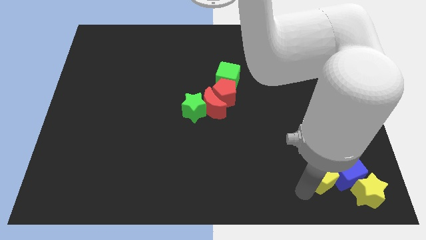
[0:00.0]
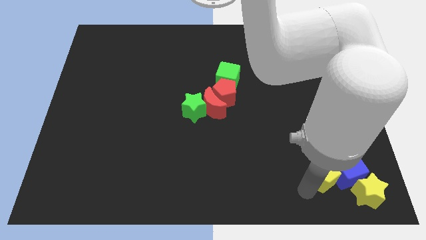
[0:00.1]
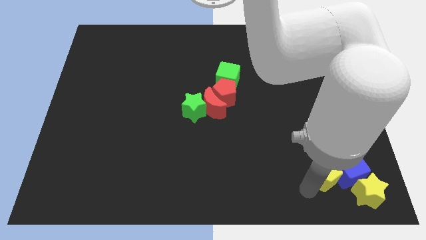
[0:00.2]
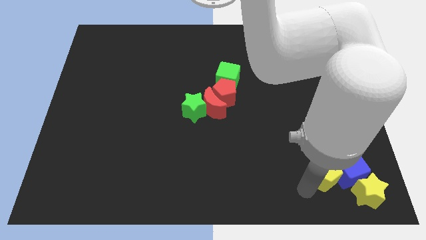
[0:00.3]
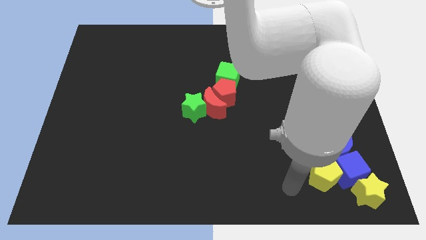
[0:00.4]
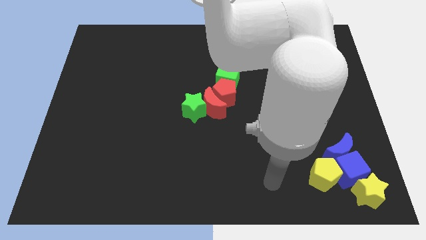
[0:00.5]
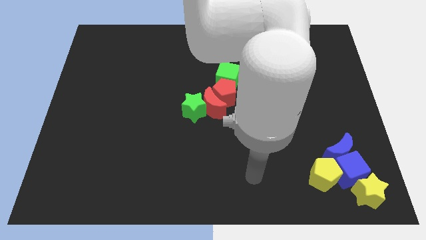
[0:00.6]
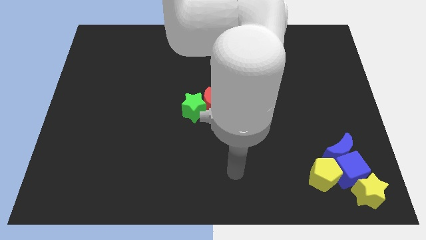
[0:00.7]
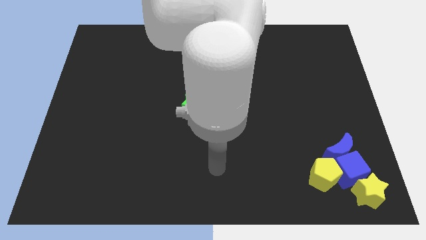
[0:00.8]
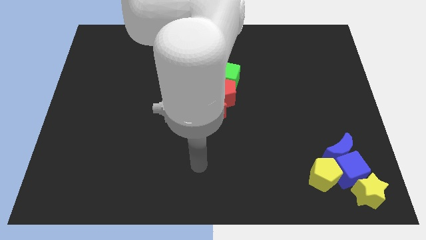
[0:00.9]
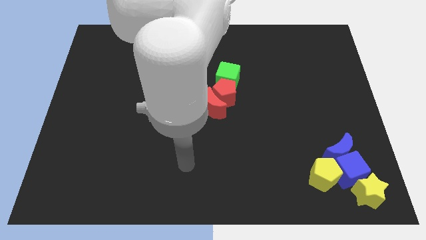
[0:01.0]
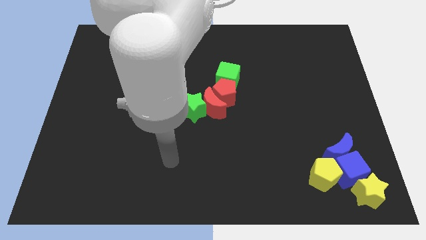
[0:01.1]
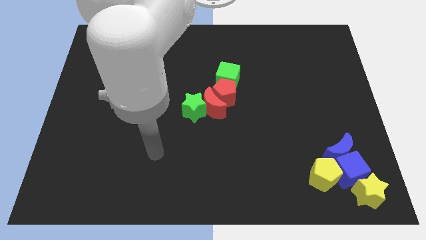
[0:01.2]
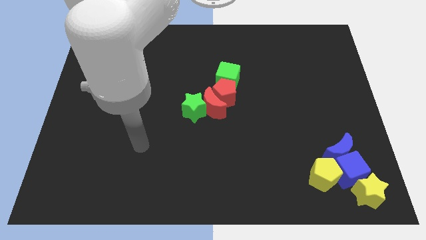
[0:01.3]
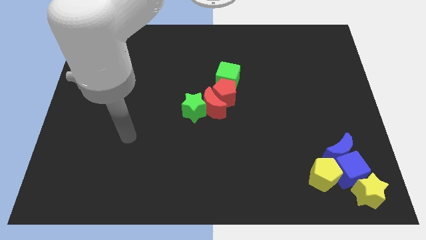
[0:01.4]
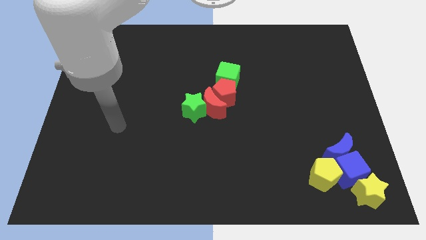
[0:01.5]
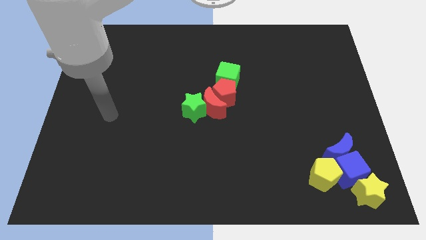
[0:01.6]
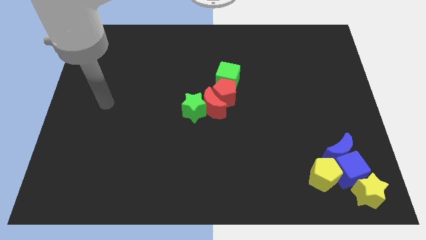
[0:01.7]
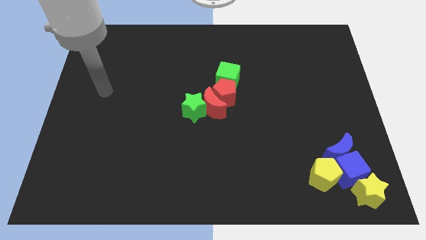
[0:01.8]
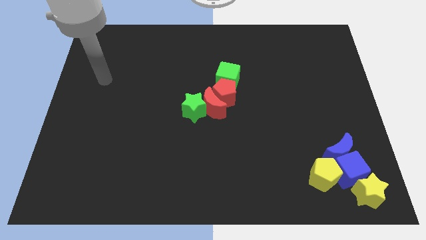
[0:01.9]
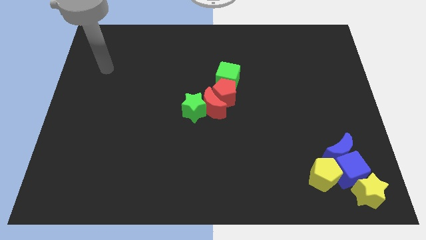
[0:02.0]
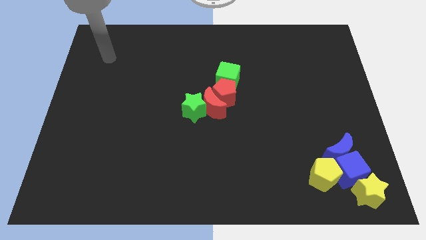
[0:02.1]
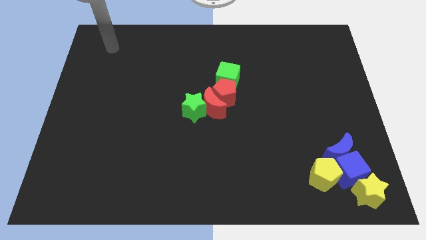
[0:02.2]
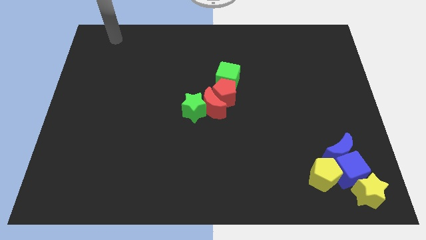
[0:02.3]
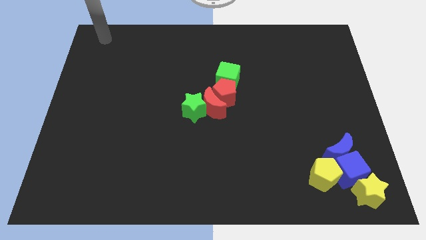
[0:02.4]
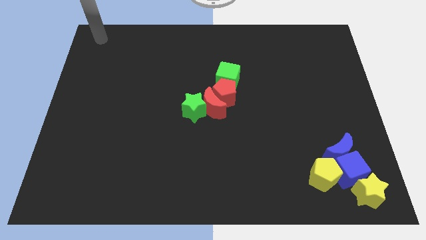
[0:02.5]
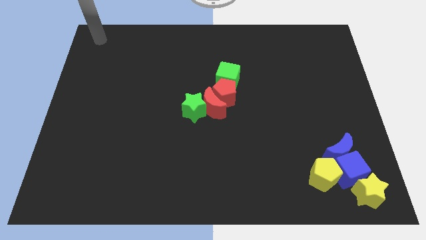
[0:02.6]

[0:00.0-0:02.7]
move your hand to the top left corner

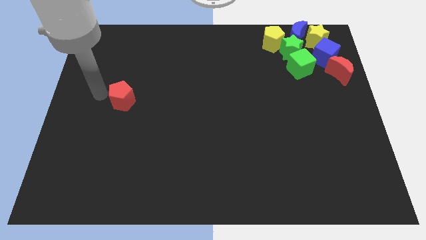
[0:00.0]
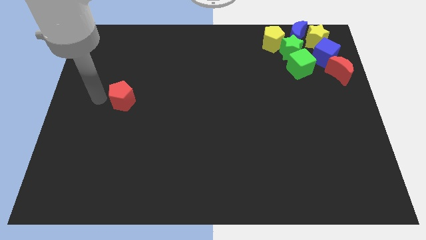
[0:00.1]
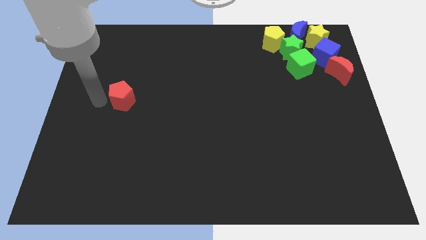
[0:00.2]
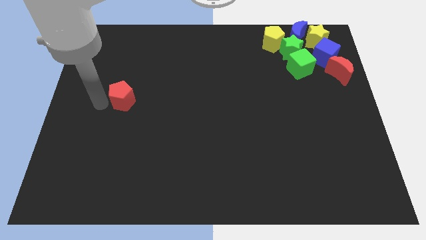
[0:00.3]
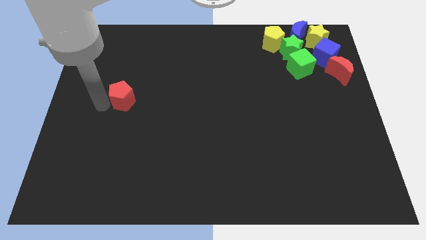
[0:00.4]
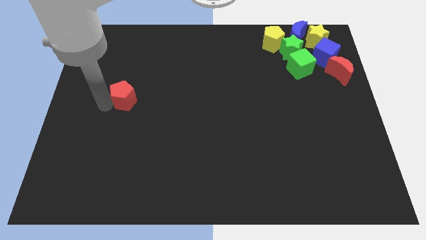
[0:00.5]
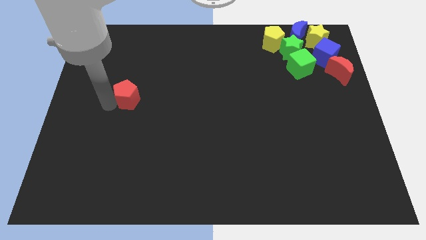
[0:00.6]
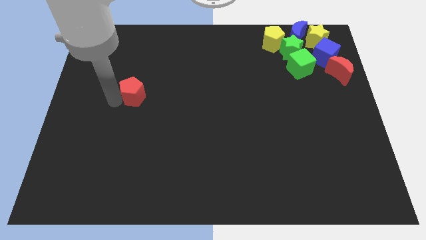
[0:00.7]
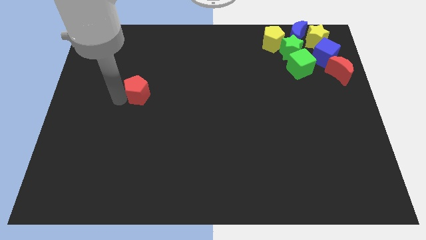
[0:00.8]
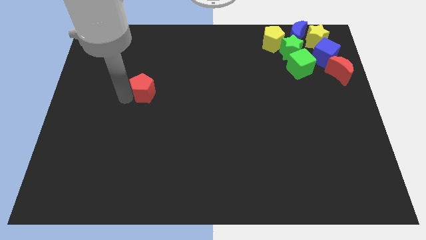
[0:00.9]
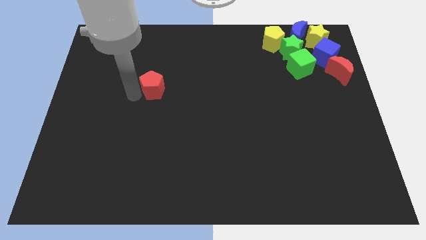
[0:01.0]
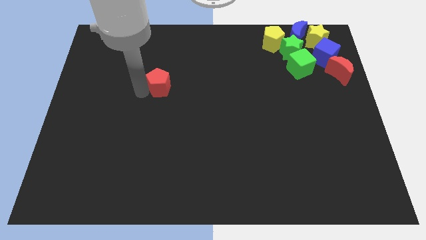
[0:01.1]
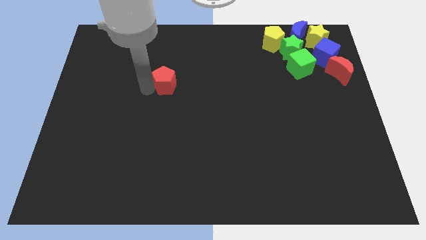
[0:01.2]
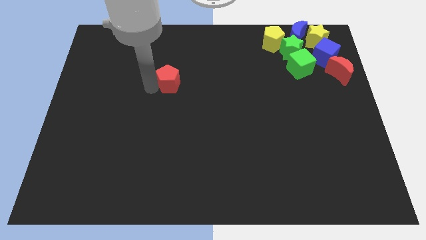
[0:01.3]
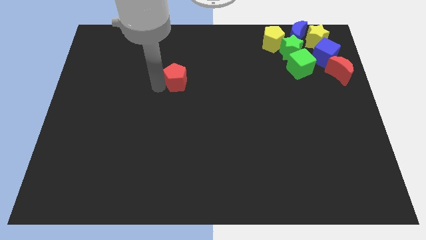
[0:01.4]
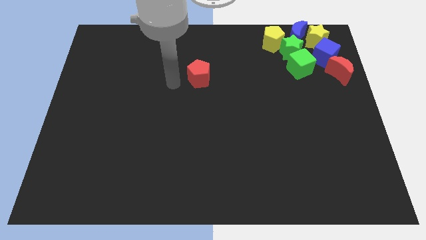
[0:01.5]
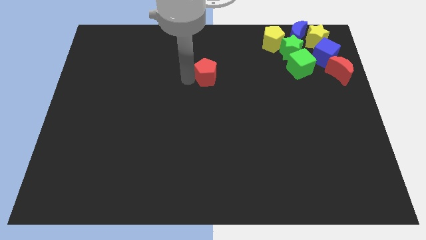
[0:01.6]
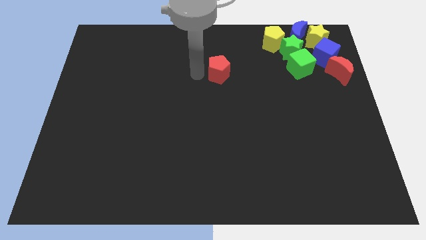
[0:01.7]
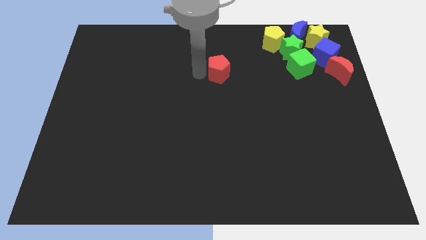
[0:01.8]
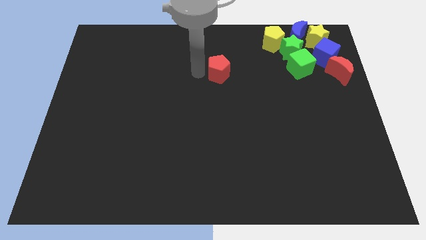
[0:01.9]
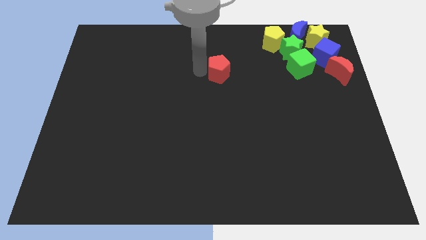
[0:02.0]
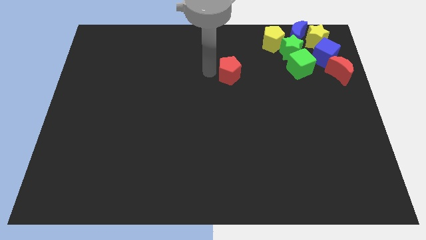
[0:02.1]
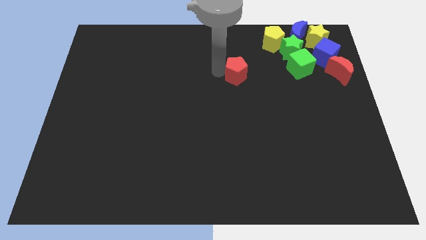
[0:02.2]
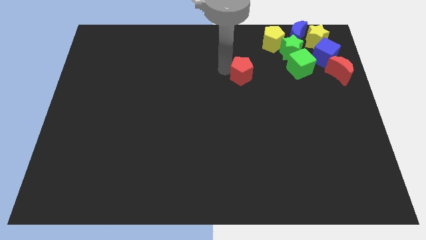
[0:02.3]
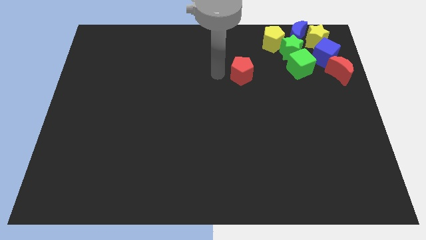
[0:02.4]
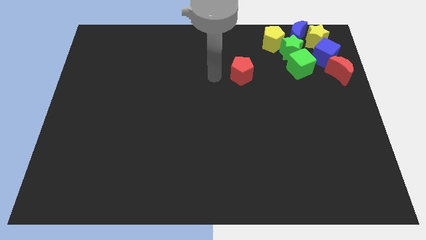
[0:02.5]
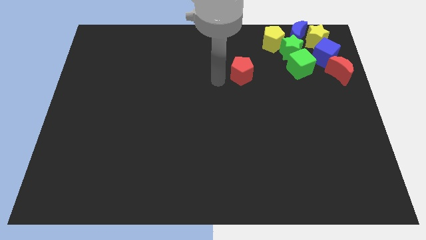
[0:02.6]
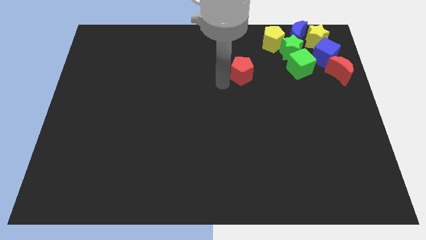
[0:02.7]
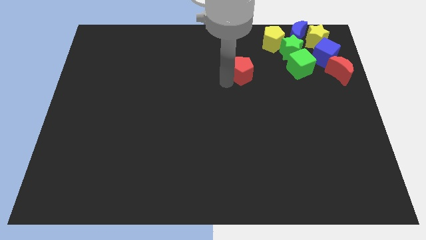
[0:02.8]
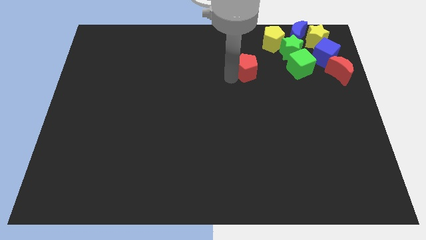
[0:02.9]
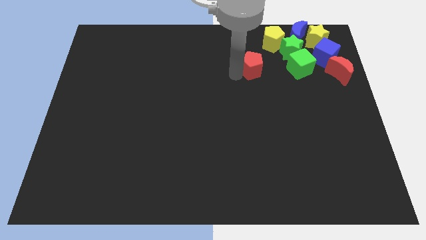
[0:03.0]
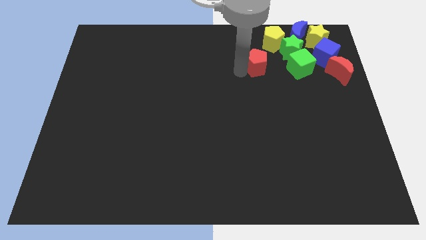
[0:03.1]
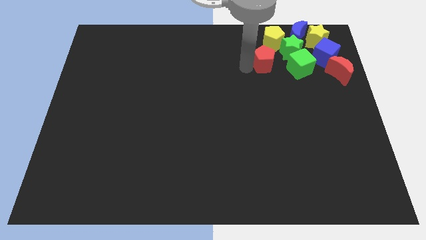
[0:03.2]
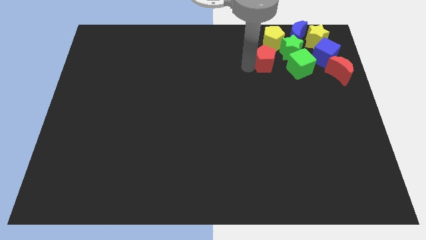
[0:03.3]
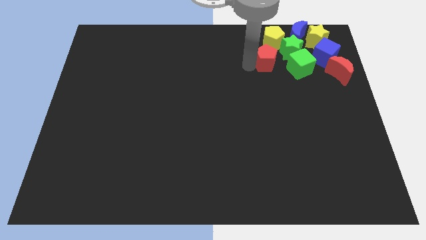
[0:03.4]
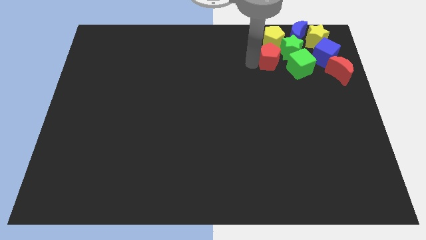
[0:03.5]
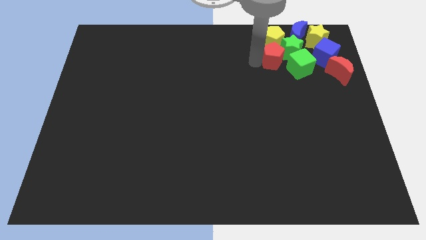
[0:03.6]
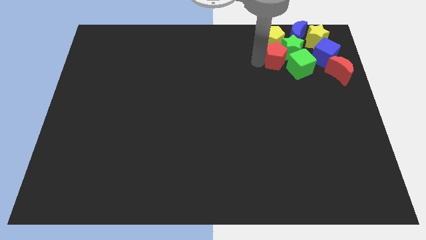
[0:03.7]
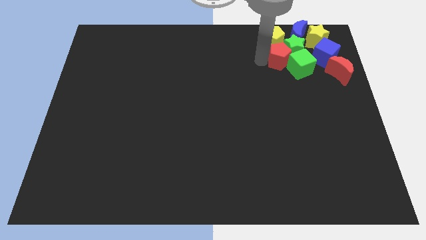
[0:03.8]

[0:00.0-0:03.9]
push the red pentagon into the group of blocks at the top right corner of the board

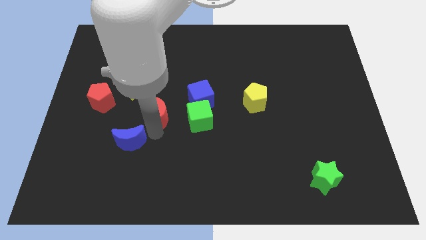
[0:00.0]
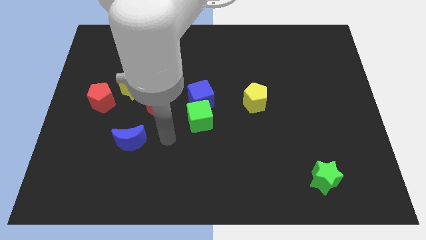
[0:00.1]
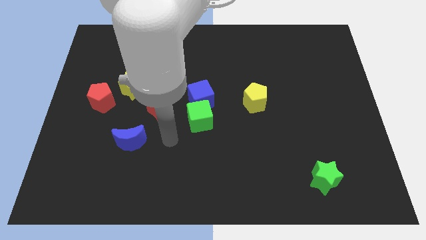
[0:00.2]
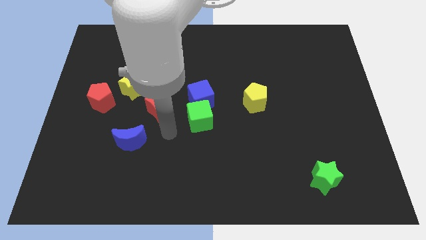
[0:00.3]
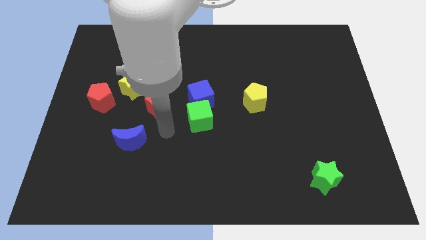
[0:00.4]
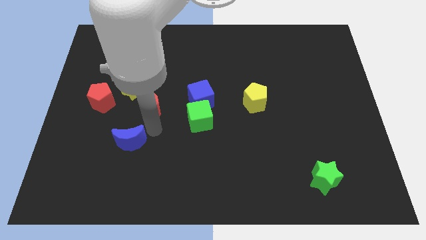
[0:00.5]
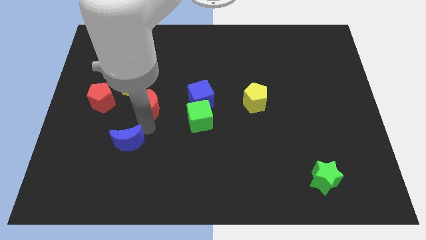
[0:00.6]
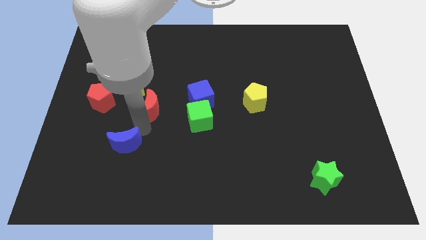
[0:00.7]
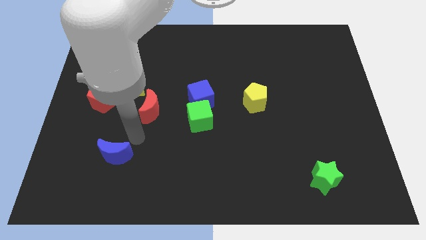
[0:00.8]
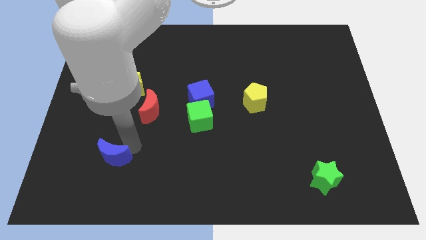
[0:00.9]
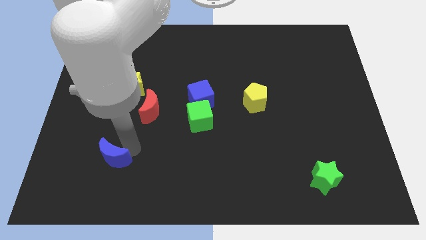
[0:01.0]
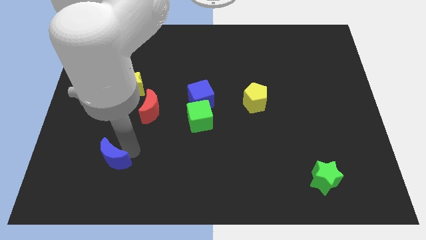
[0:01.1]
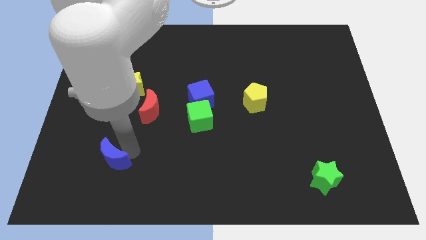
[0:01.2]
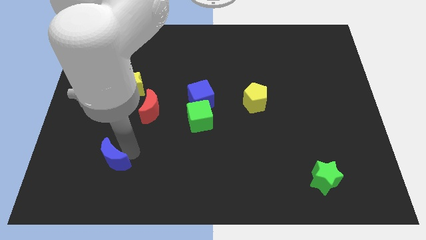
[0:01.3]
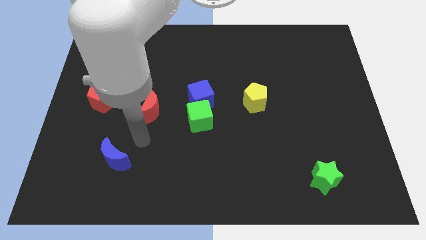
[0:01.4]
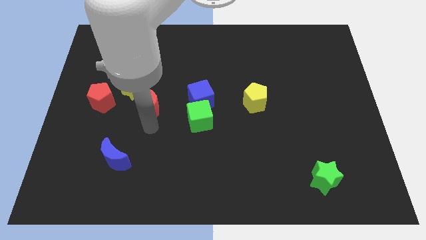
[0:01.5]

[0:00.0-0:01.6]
separate the blue and red moon

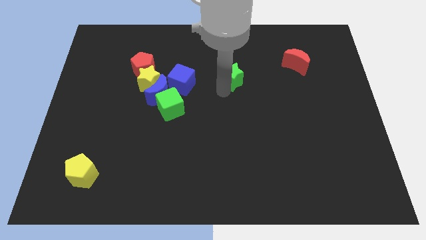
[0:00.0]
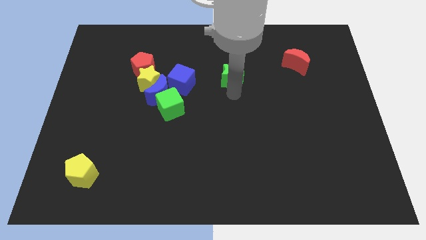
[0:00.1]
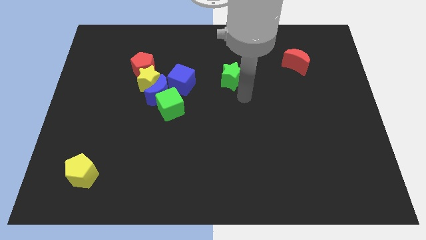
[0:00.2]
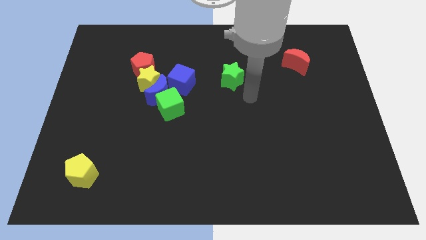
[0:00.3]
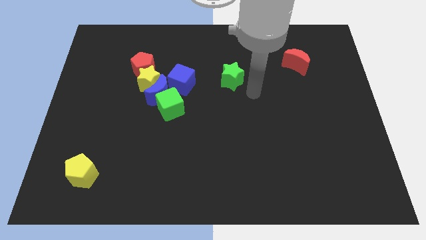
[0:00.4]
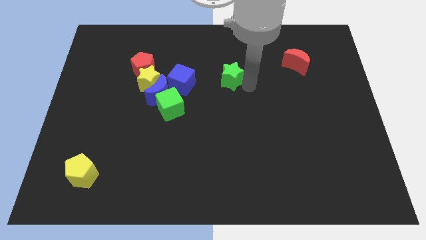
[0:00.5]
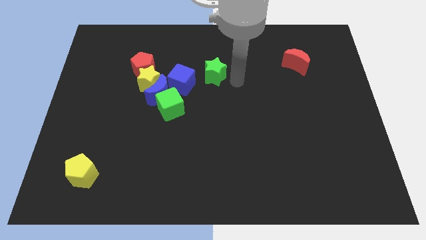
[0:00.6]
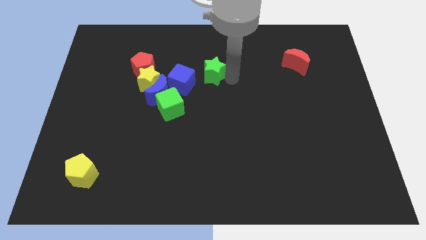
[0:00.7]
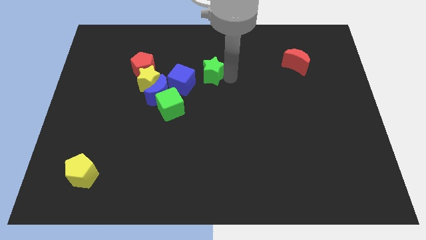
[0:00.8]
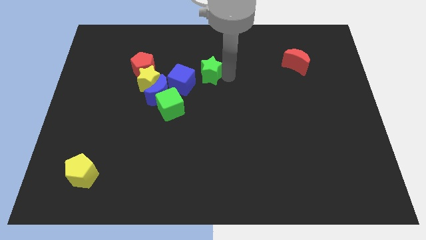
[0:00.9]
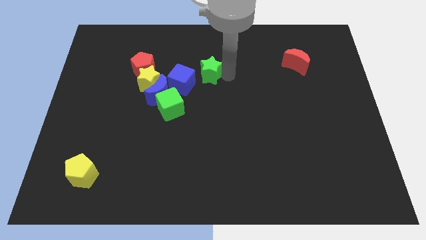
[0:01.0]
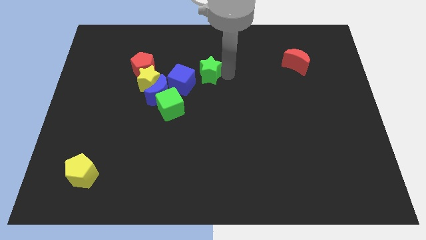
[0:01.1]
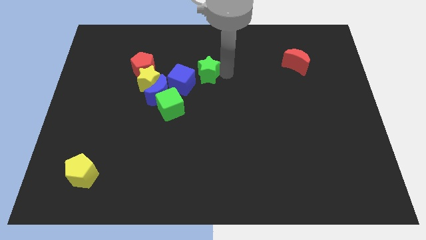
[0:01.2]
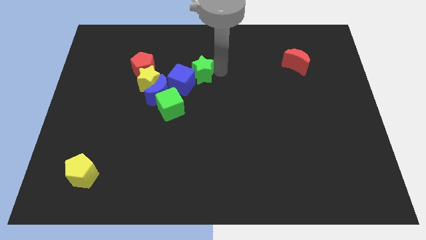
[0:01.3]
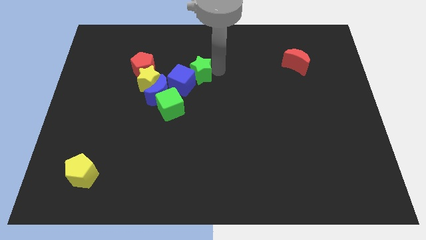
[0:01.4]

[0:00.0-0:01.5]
move the green star into the blue cube
